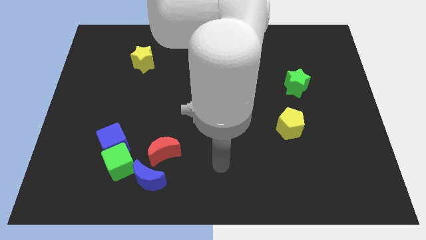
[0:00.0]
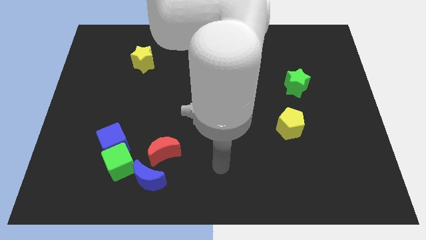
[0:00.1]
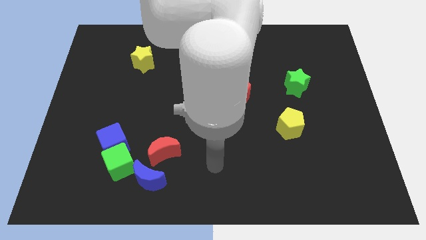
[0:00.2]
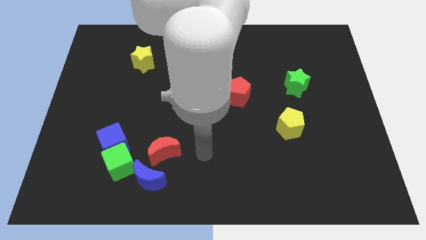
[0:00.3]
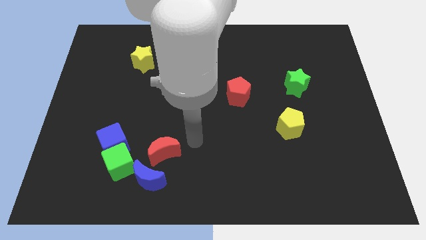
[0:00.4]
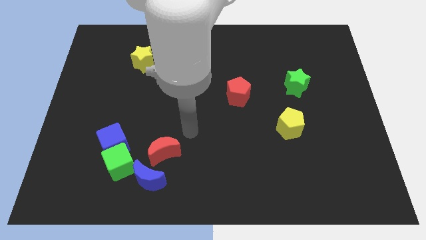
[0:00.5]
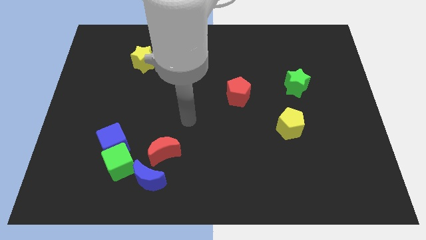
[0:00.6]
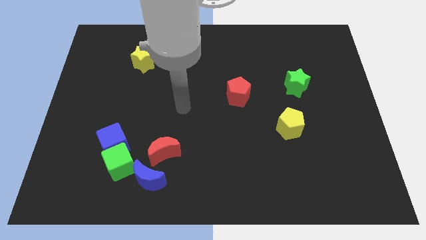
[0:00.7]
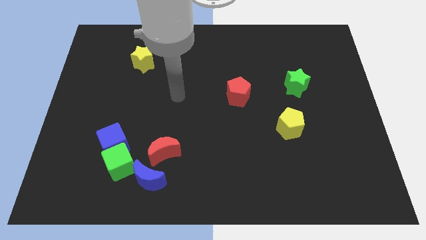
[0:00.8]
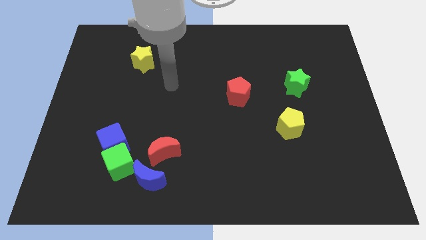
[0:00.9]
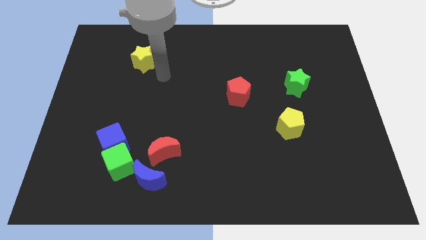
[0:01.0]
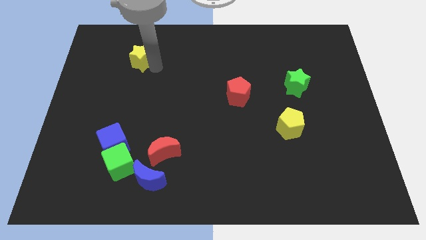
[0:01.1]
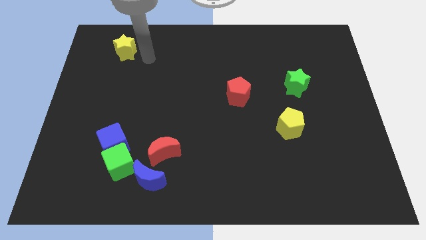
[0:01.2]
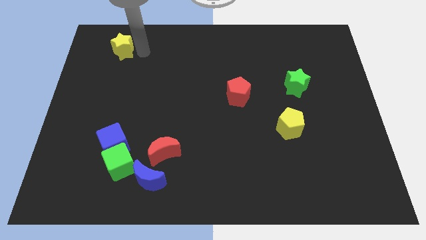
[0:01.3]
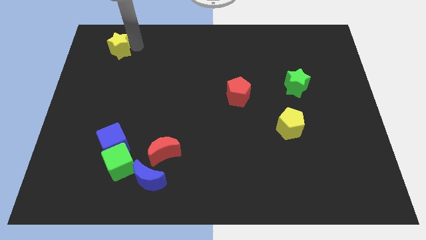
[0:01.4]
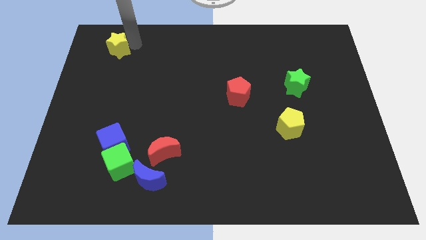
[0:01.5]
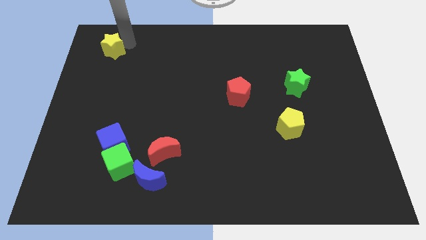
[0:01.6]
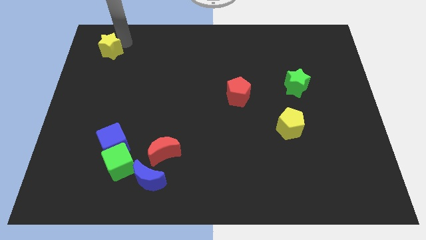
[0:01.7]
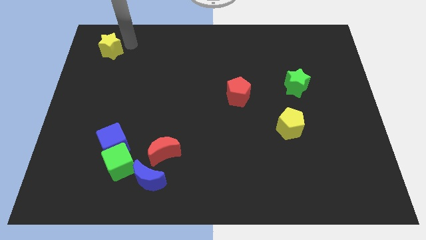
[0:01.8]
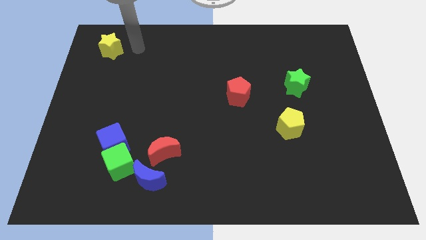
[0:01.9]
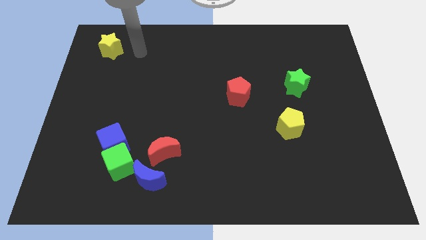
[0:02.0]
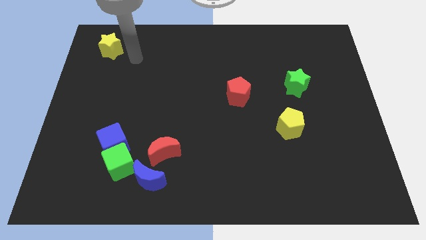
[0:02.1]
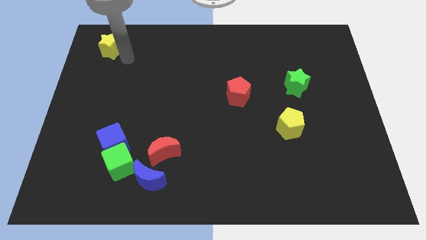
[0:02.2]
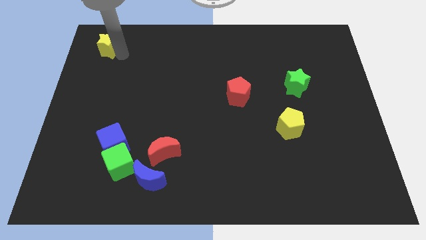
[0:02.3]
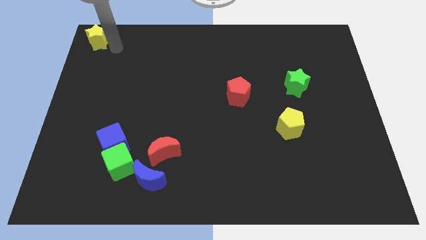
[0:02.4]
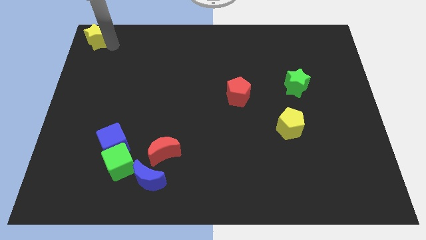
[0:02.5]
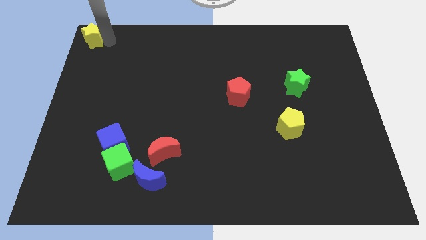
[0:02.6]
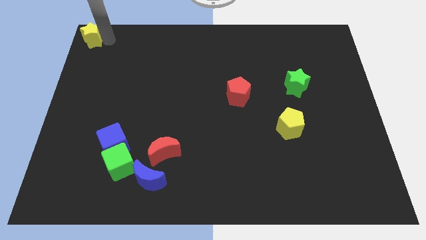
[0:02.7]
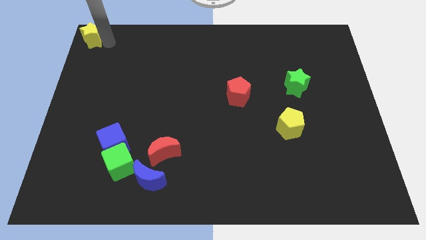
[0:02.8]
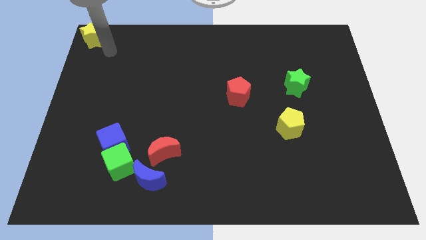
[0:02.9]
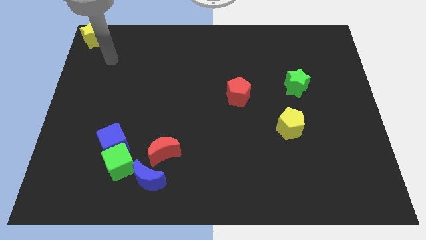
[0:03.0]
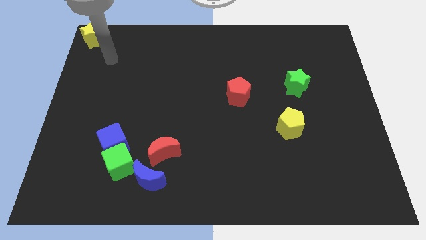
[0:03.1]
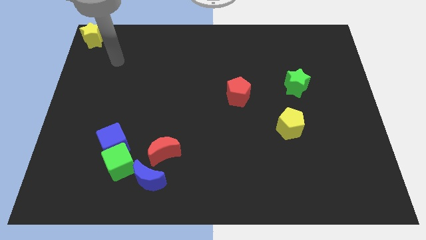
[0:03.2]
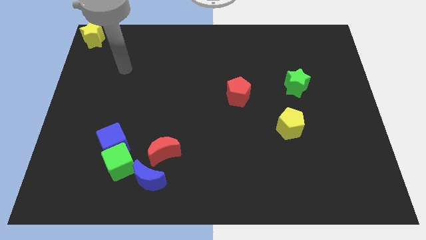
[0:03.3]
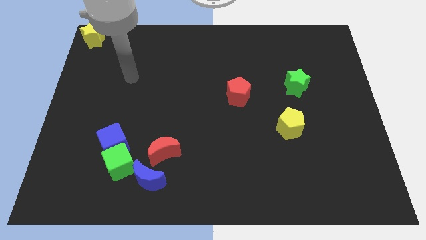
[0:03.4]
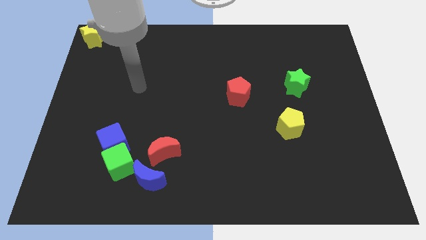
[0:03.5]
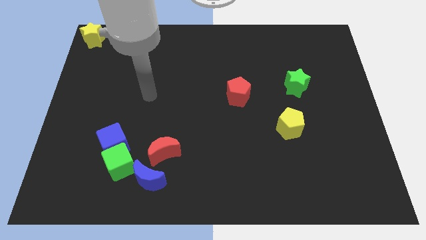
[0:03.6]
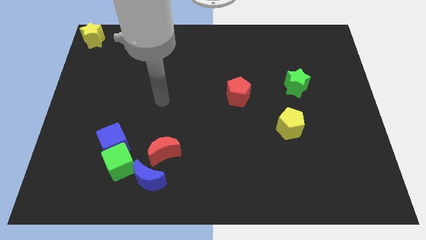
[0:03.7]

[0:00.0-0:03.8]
move the yellow star to the top left corner of the board

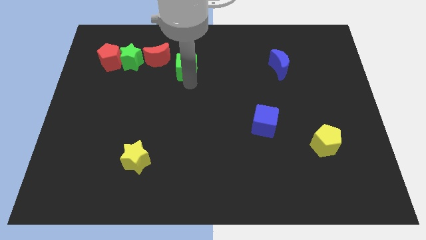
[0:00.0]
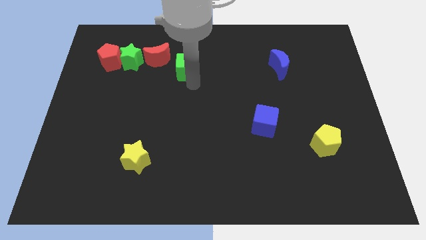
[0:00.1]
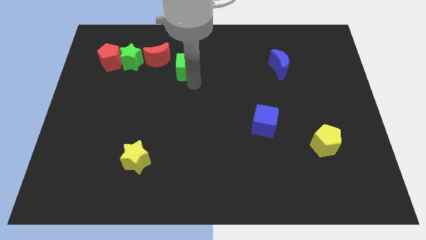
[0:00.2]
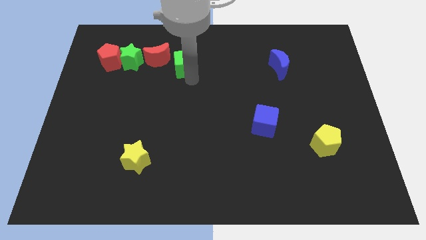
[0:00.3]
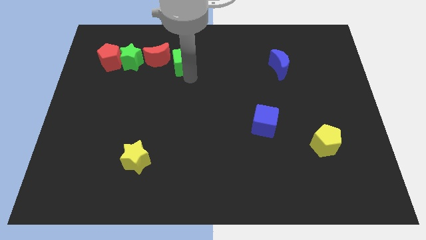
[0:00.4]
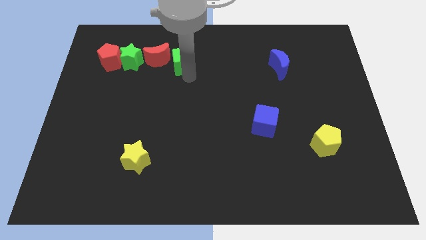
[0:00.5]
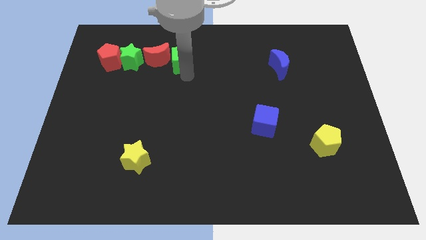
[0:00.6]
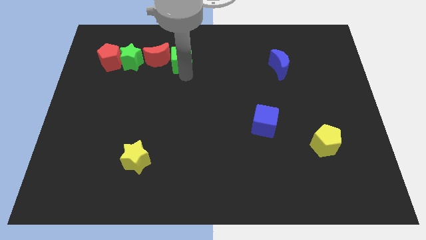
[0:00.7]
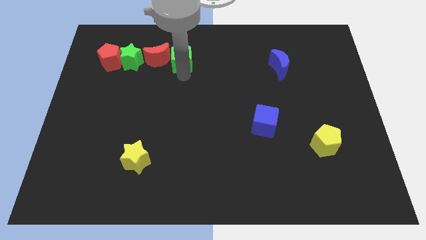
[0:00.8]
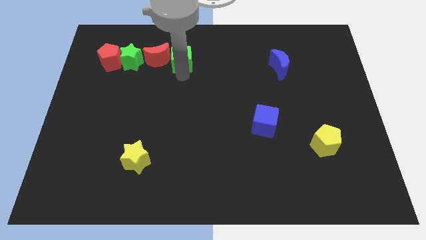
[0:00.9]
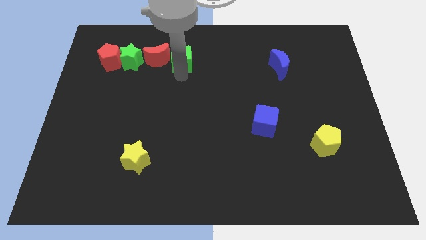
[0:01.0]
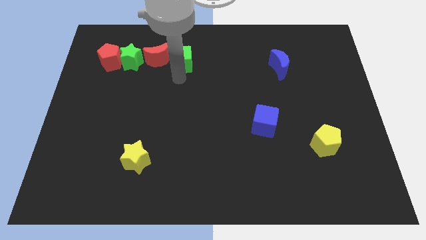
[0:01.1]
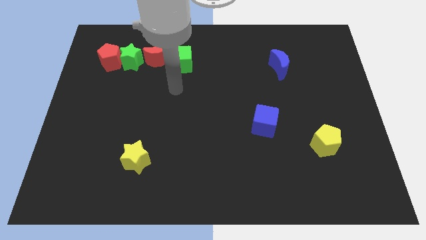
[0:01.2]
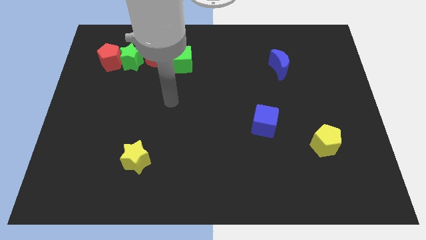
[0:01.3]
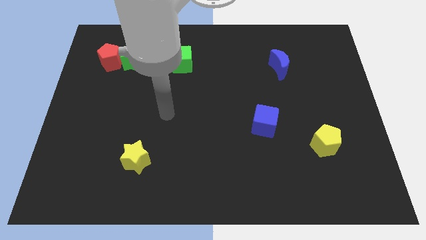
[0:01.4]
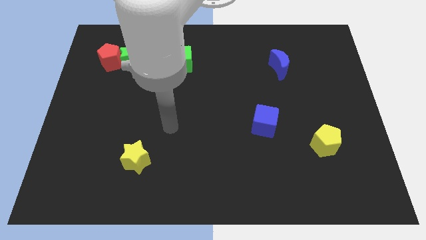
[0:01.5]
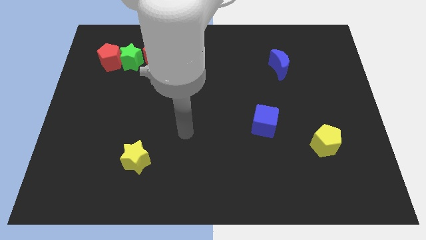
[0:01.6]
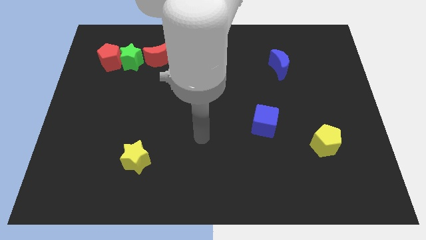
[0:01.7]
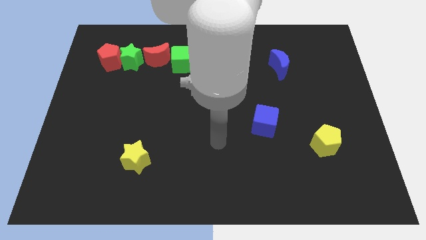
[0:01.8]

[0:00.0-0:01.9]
move your arm slightly bottom

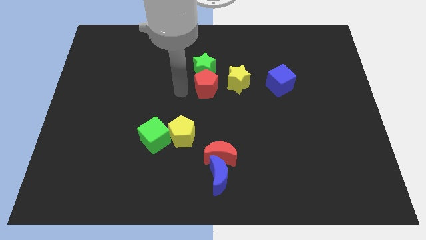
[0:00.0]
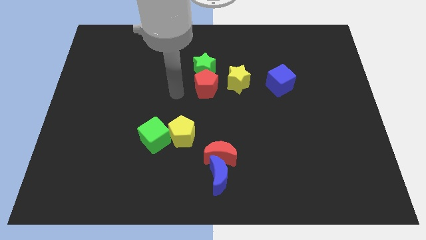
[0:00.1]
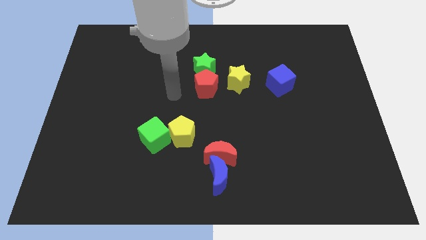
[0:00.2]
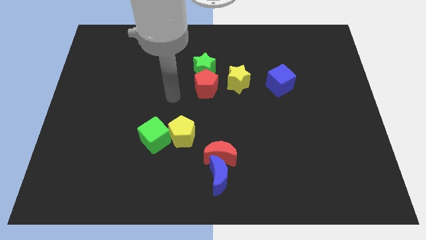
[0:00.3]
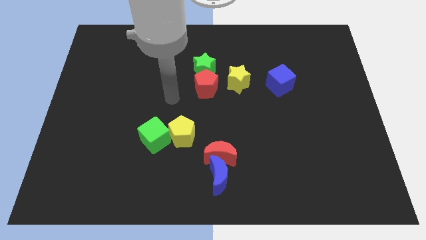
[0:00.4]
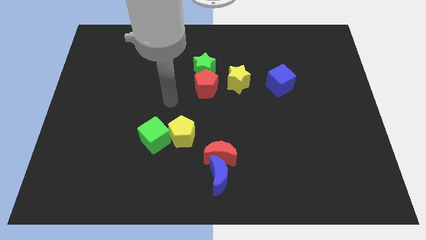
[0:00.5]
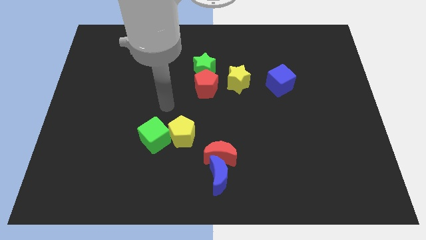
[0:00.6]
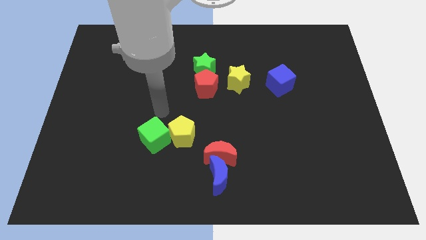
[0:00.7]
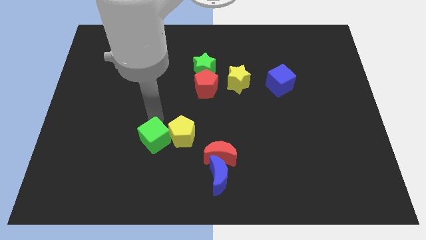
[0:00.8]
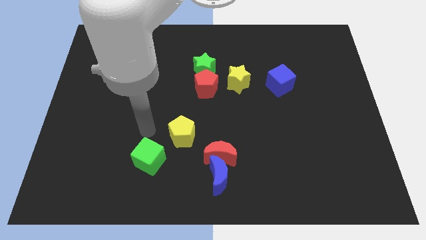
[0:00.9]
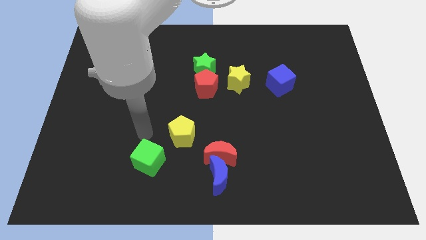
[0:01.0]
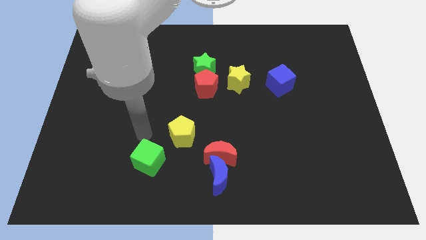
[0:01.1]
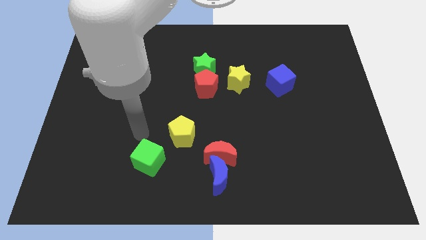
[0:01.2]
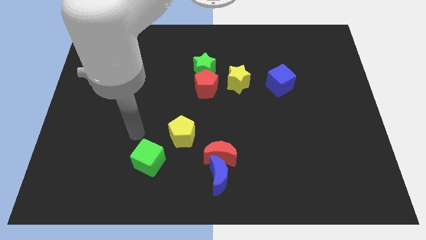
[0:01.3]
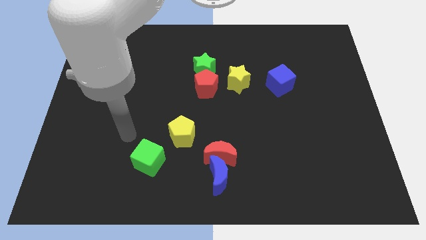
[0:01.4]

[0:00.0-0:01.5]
separate the green cube from the yellow pentagon

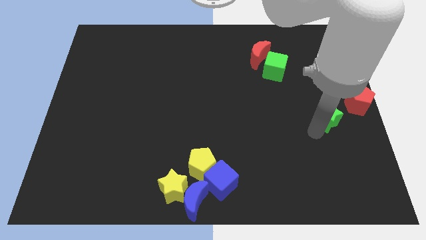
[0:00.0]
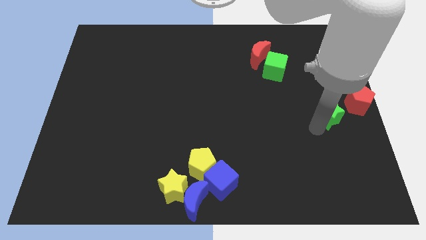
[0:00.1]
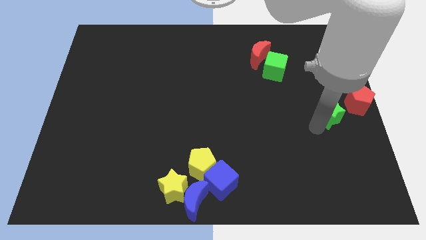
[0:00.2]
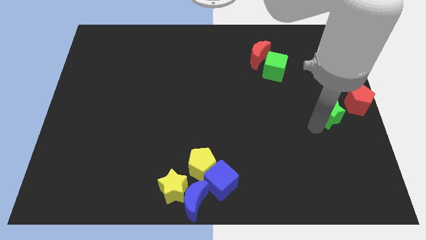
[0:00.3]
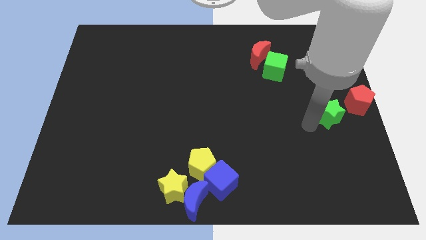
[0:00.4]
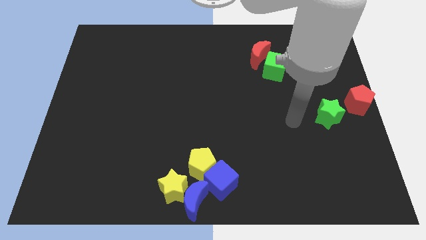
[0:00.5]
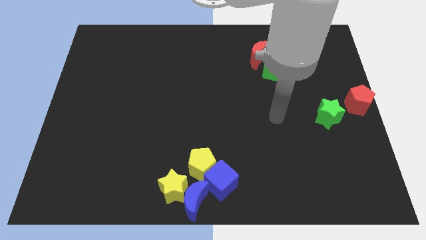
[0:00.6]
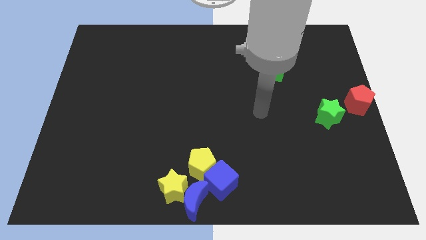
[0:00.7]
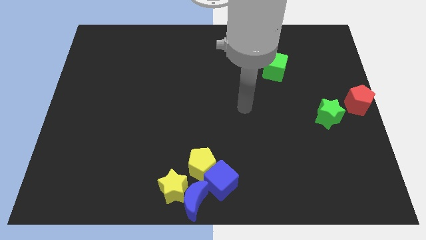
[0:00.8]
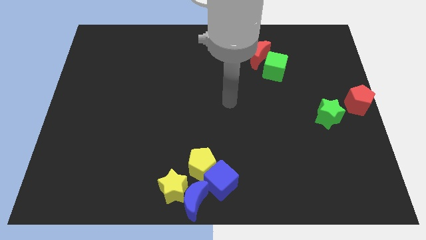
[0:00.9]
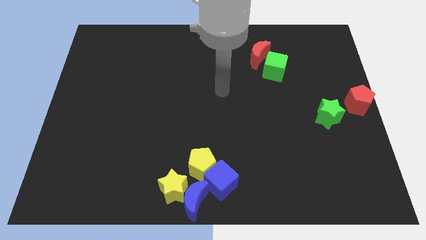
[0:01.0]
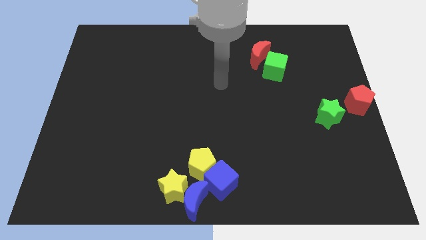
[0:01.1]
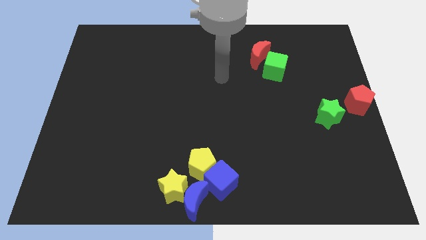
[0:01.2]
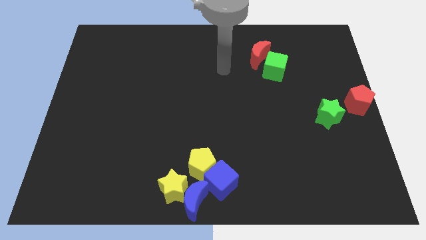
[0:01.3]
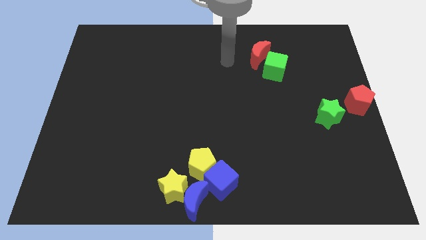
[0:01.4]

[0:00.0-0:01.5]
move away from the green star

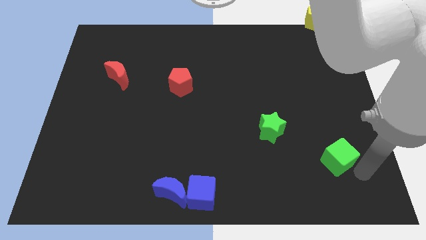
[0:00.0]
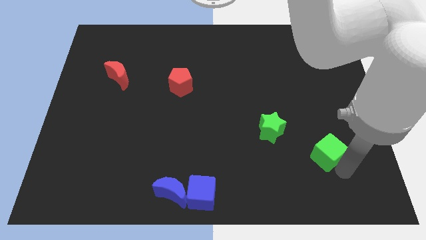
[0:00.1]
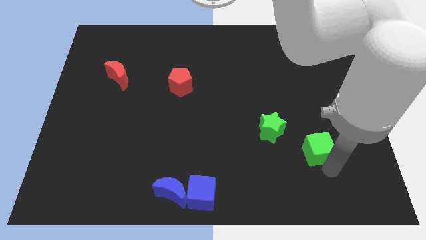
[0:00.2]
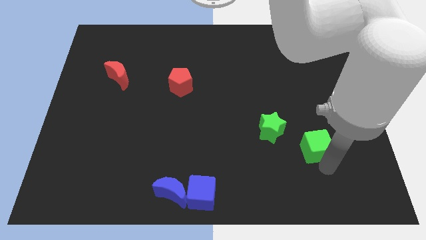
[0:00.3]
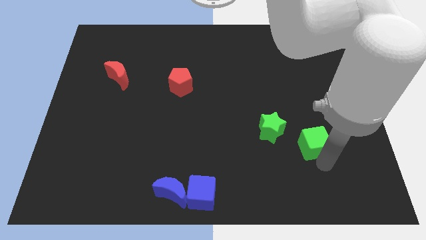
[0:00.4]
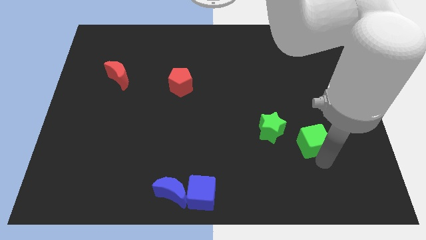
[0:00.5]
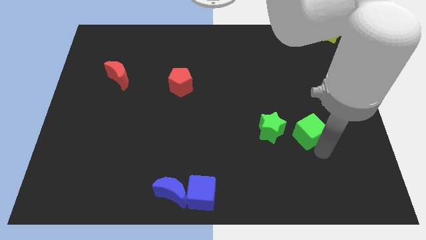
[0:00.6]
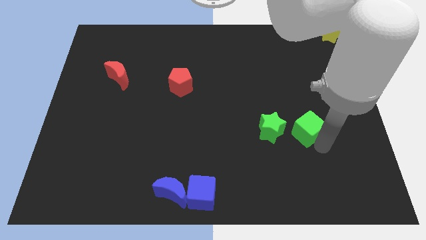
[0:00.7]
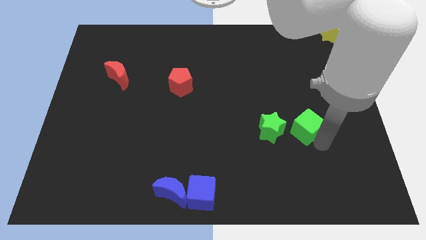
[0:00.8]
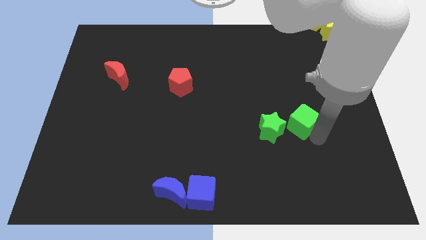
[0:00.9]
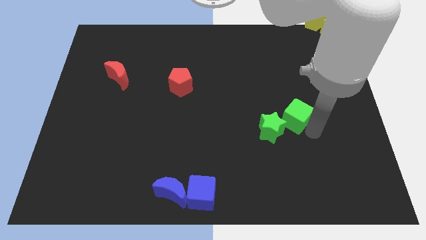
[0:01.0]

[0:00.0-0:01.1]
move green cube into green star
